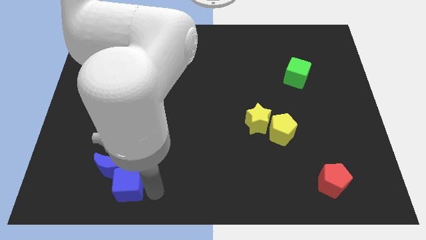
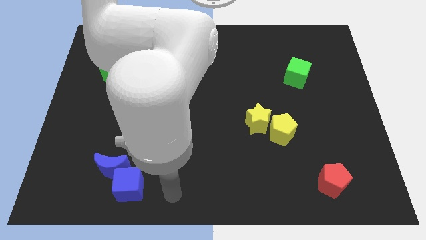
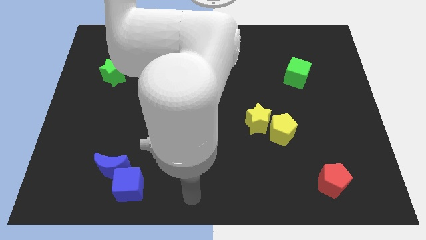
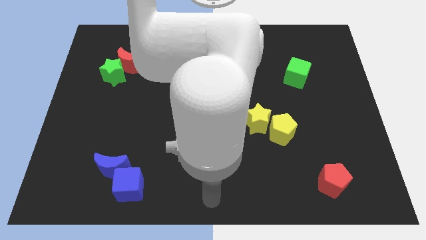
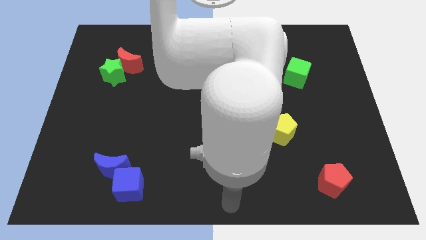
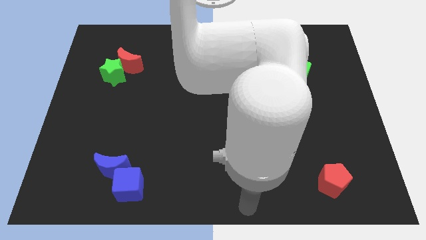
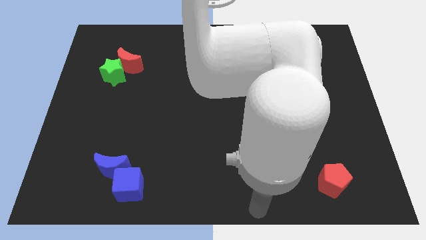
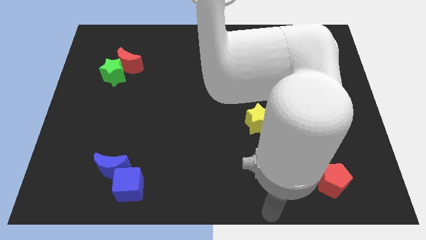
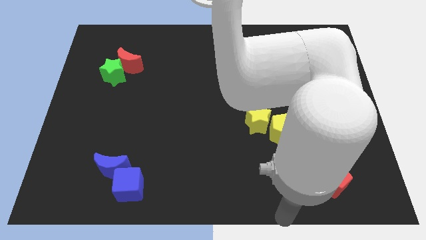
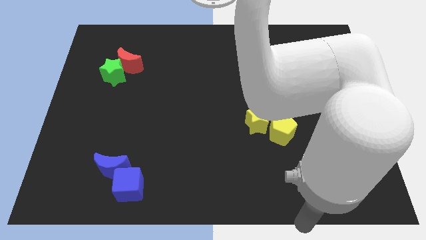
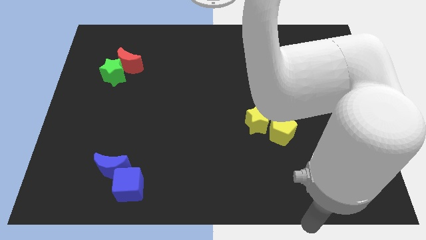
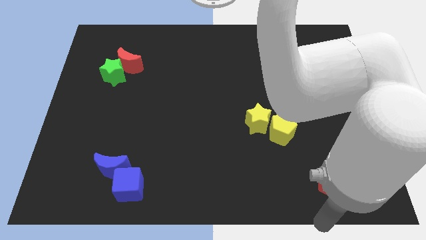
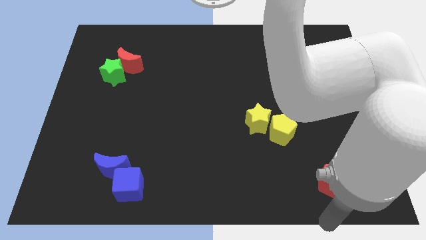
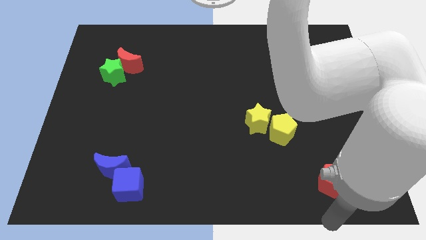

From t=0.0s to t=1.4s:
move your arm towards the bottom right corner of the board

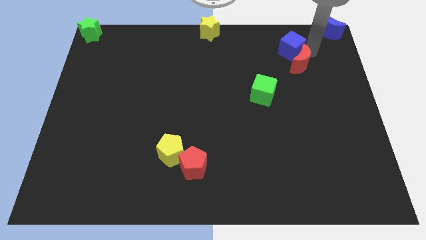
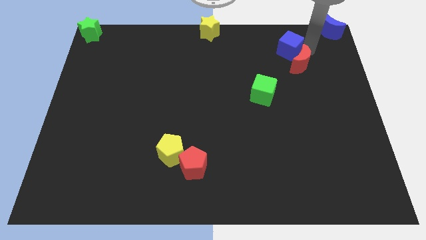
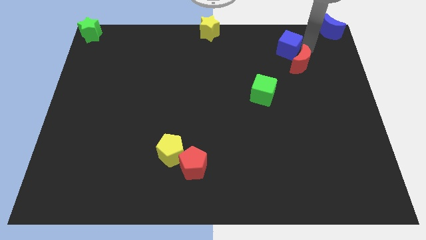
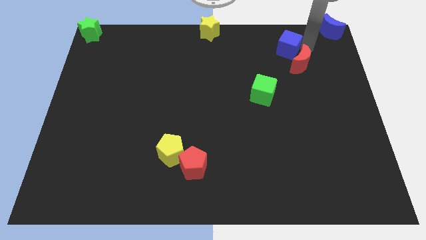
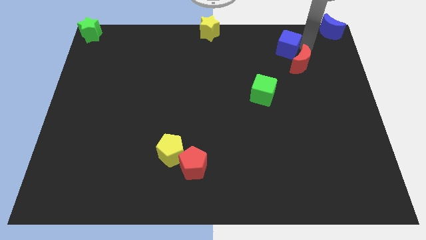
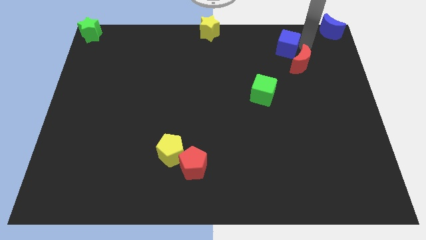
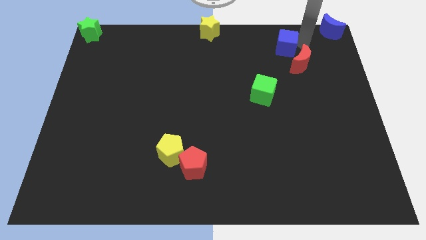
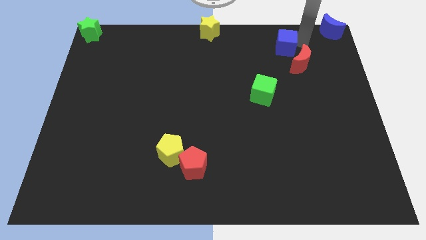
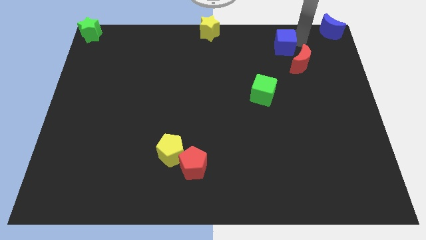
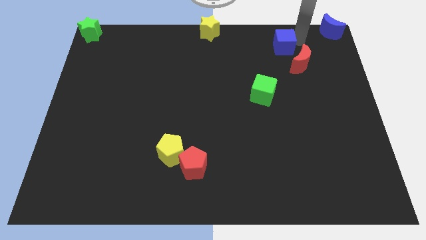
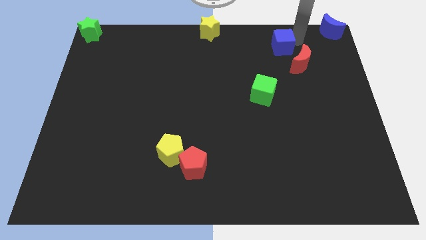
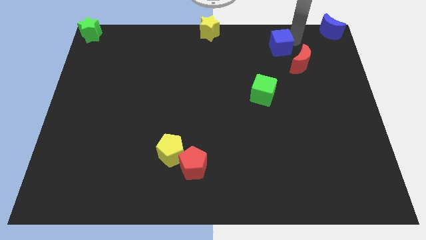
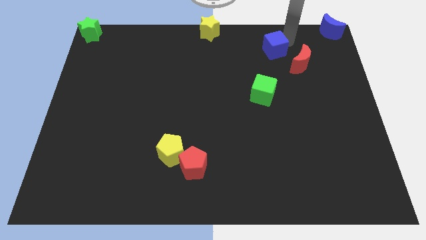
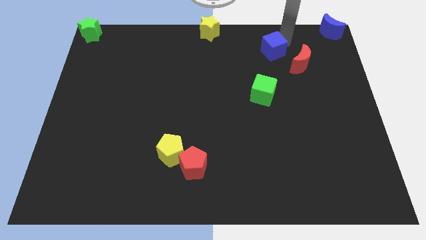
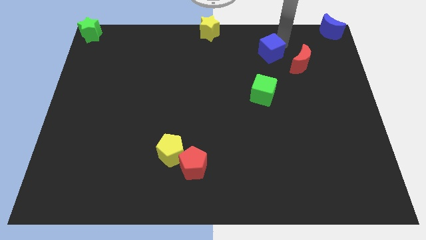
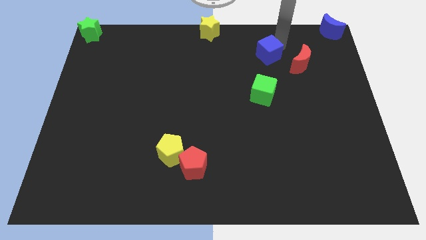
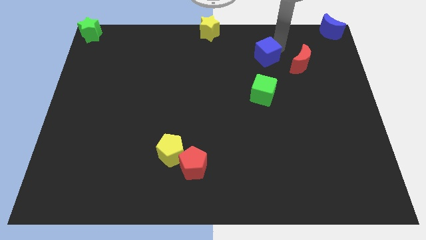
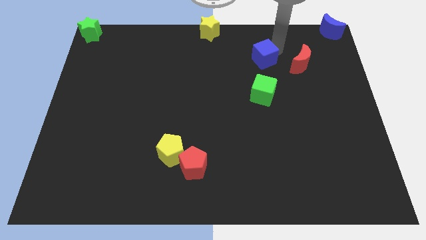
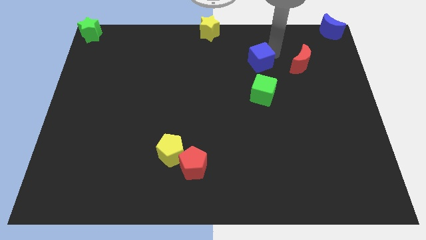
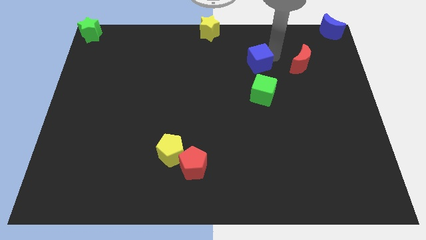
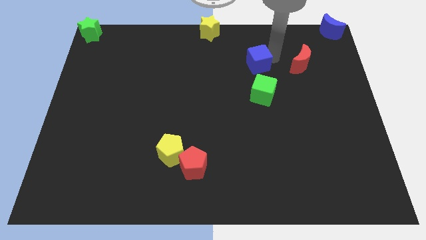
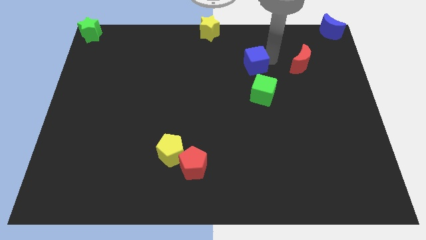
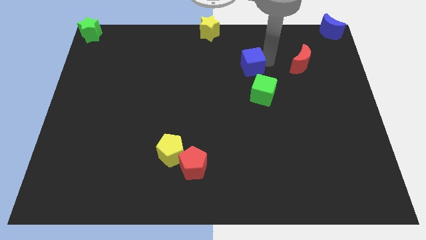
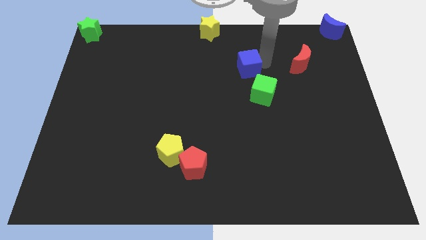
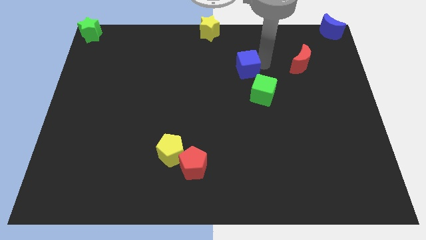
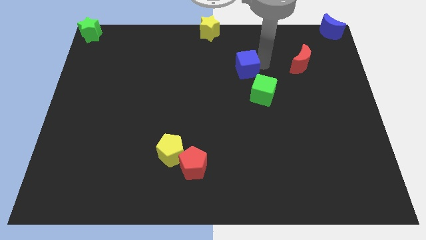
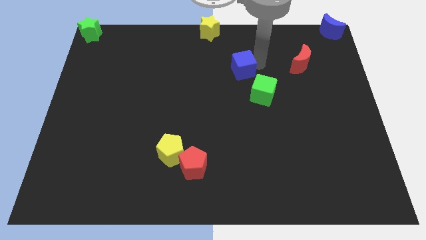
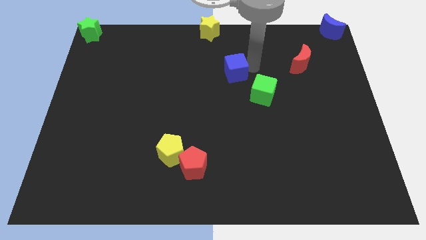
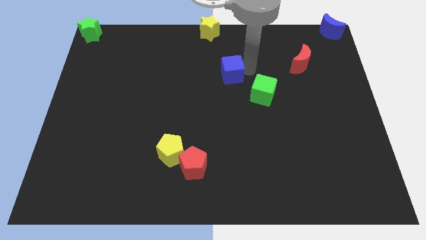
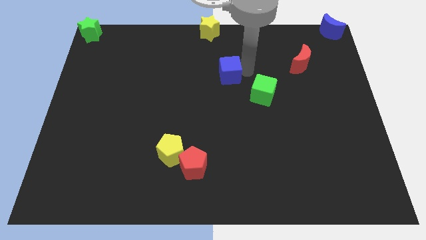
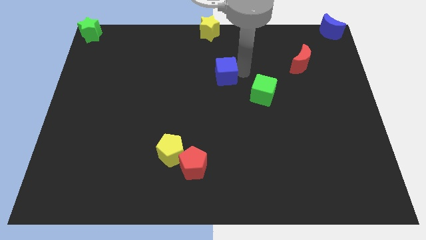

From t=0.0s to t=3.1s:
push the blue cube to the center

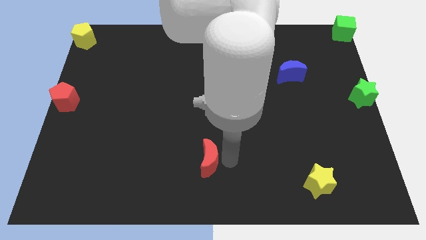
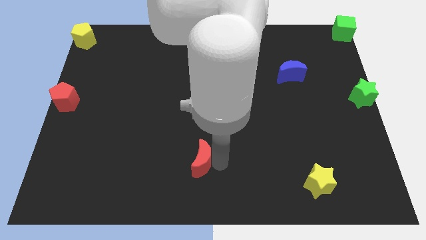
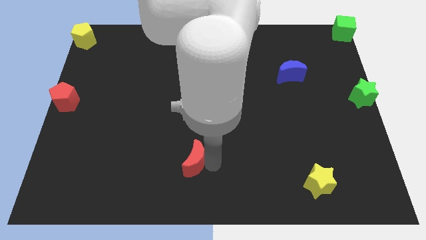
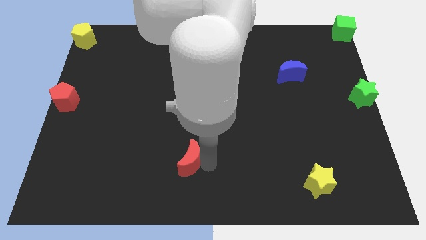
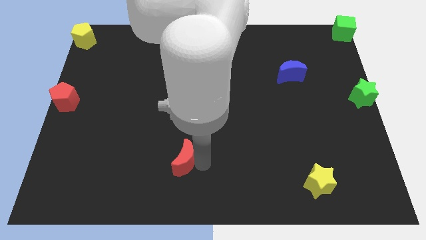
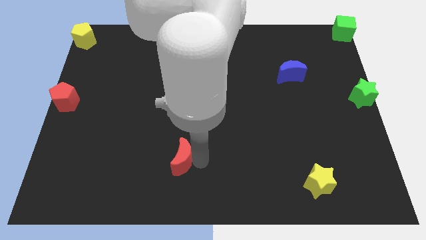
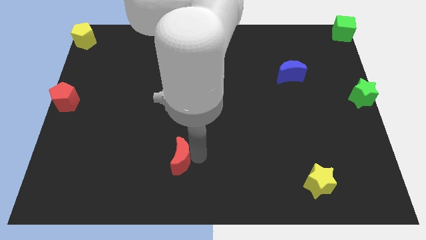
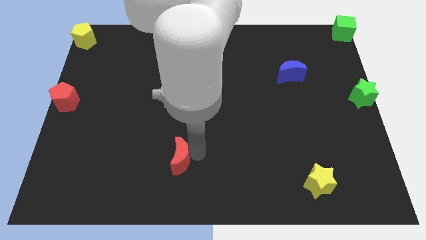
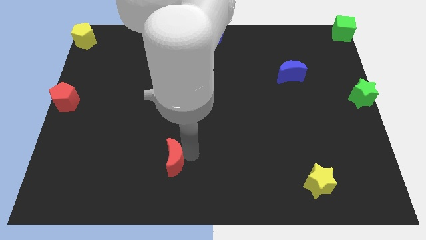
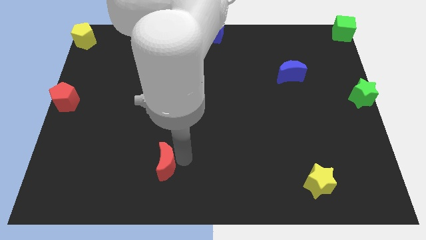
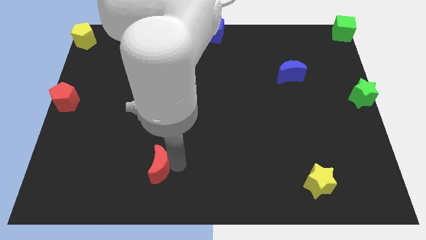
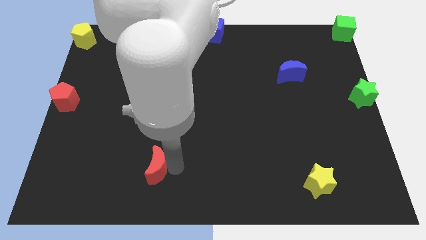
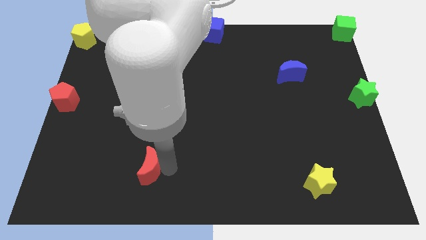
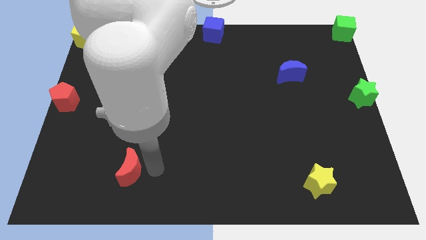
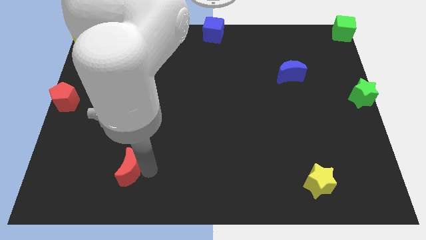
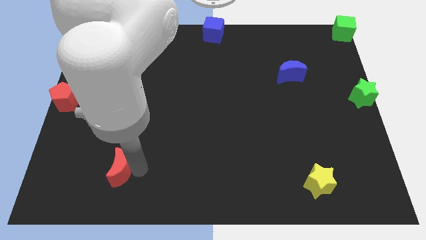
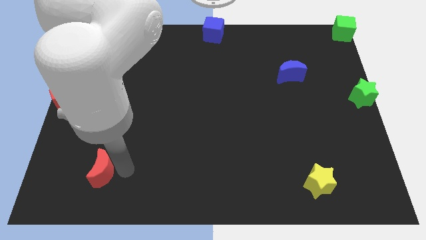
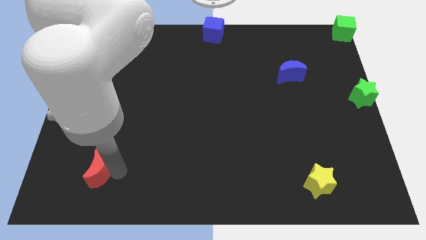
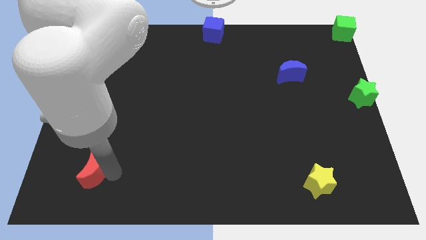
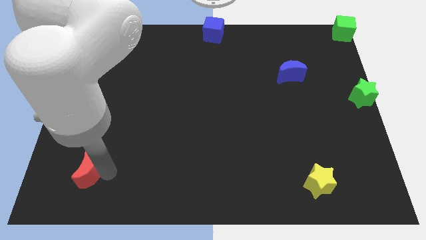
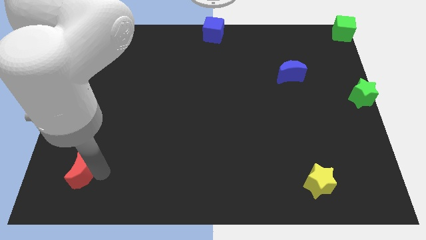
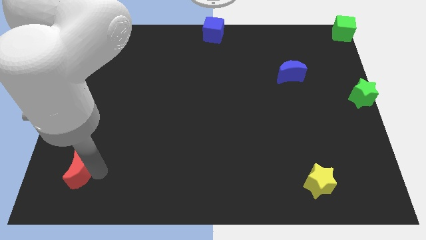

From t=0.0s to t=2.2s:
push the red crescent to the left side

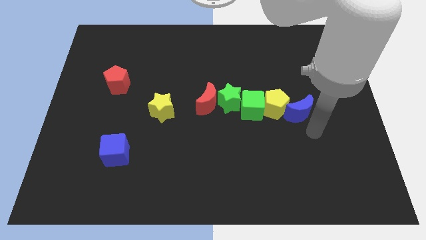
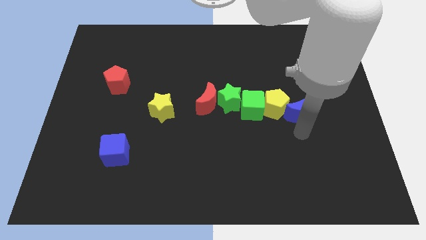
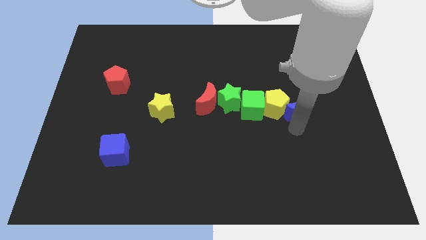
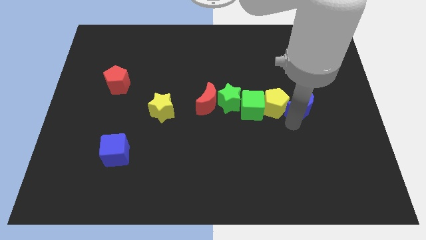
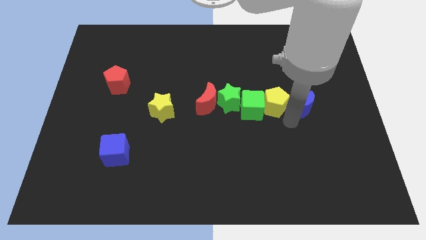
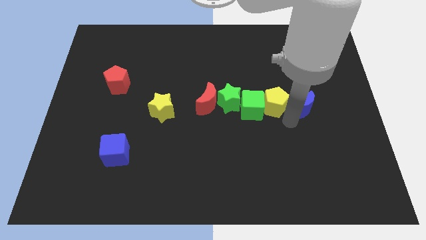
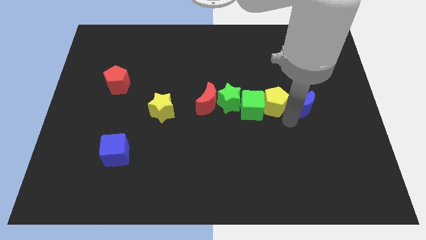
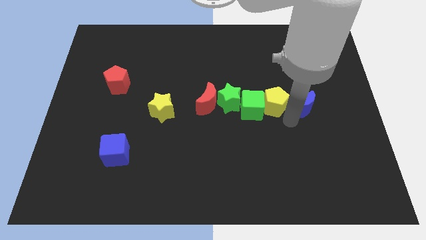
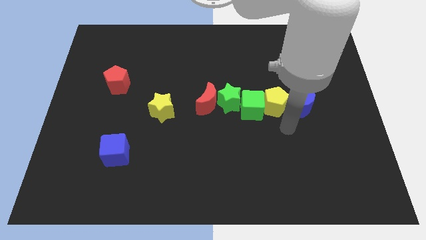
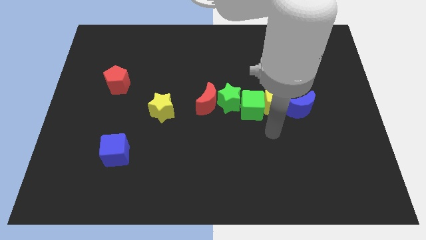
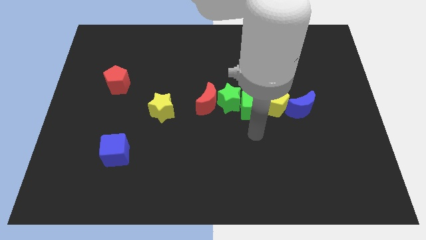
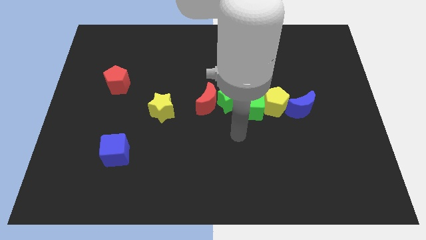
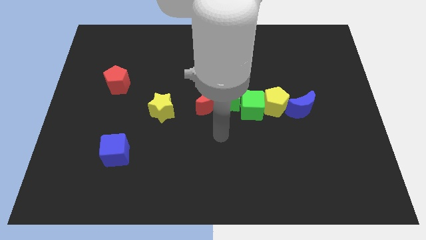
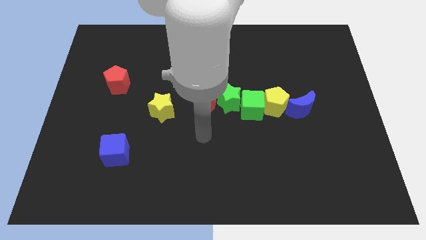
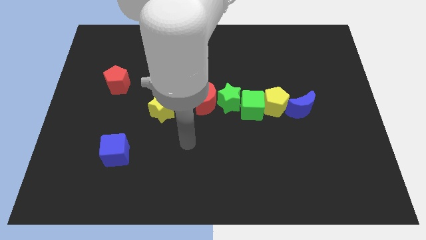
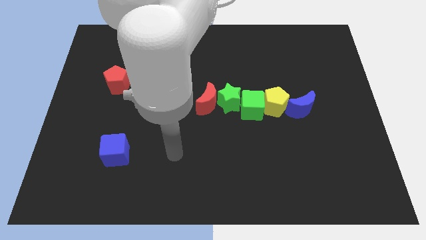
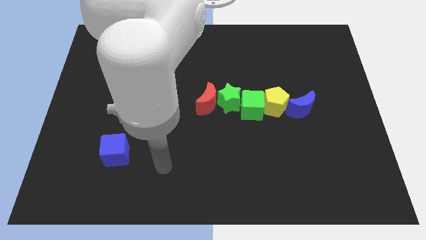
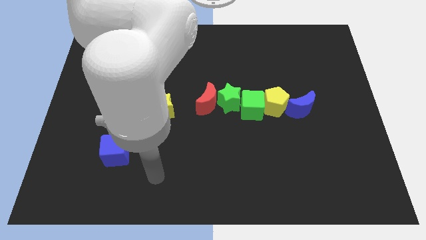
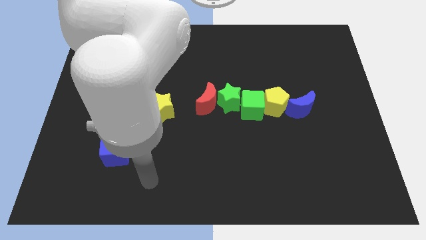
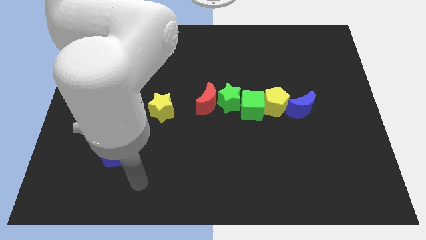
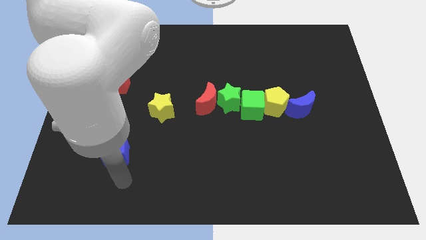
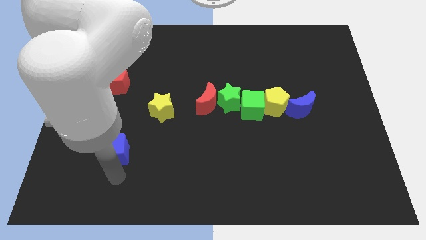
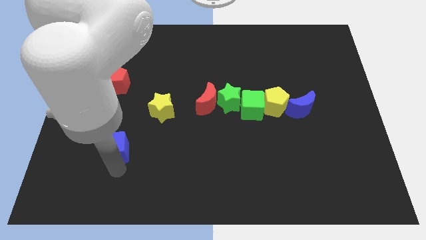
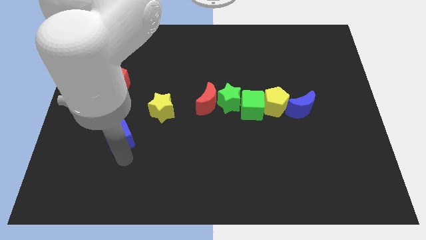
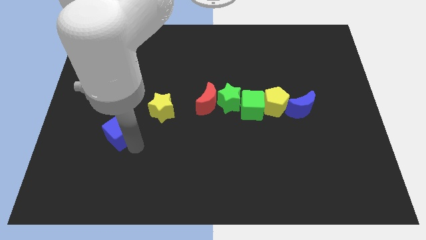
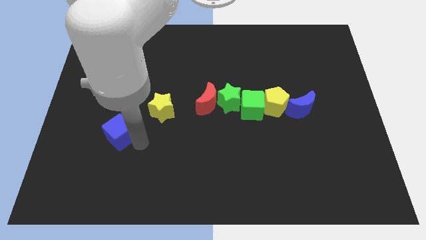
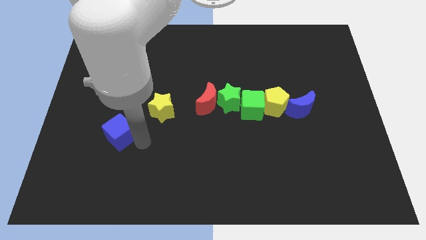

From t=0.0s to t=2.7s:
move the blue cube slightly up of the board
